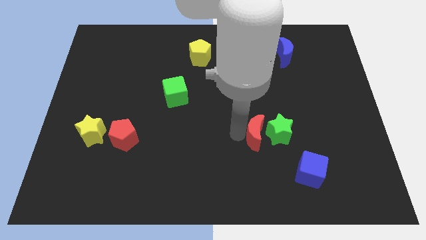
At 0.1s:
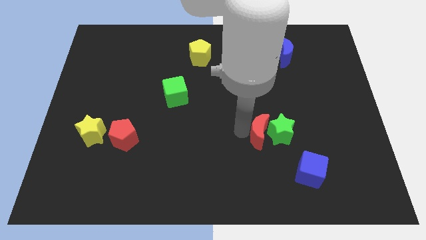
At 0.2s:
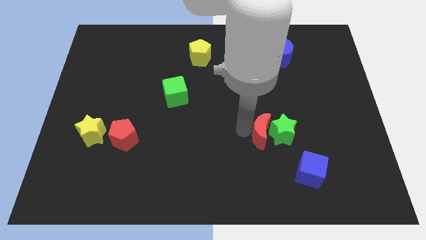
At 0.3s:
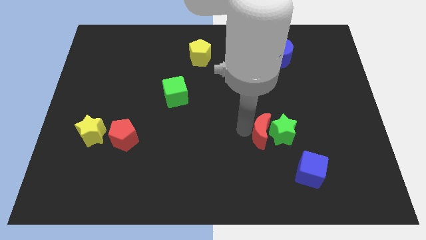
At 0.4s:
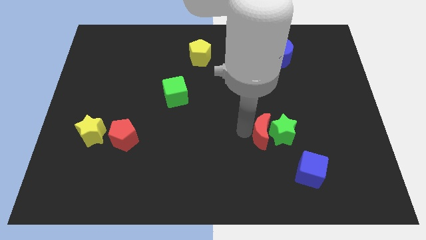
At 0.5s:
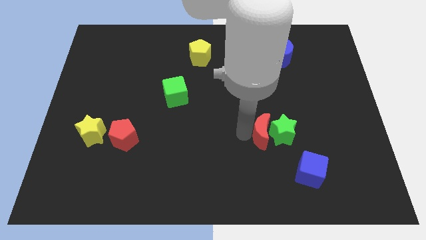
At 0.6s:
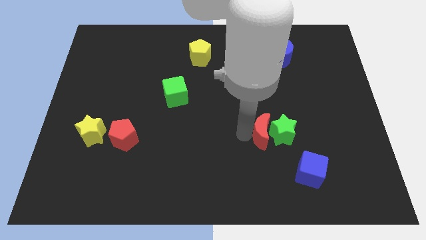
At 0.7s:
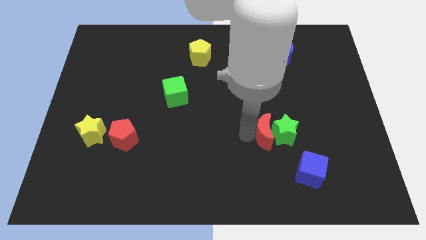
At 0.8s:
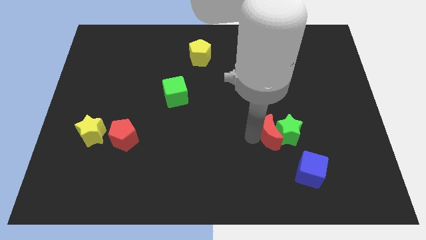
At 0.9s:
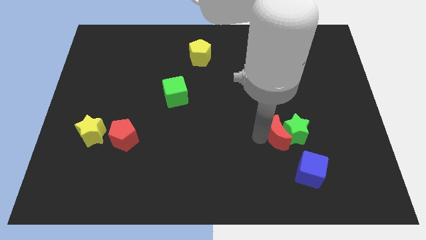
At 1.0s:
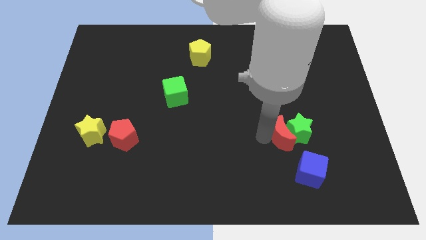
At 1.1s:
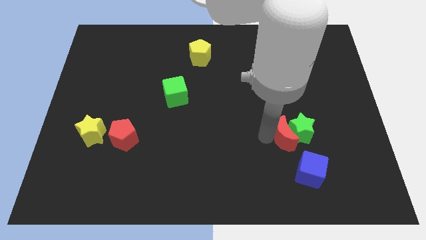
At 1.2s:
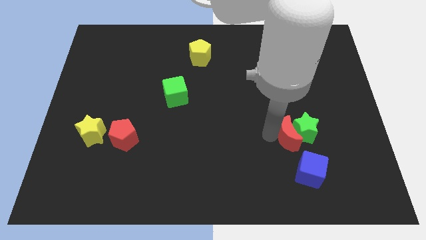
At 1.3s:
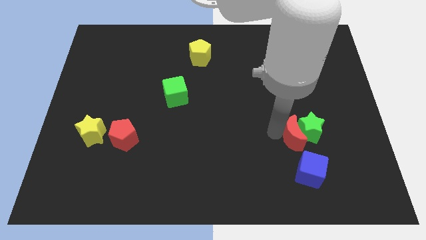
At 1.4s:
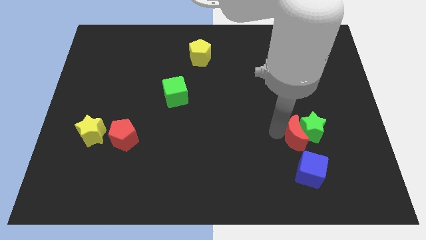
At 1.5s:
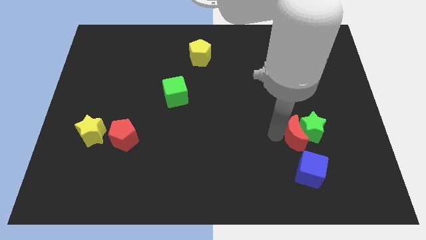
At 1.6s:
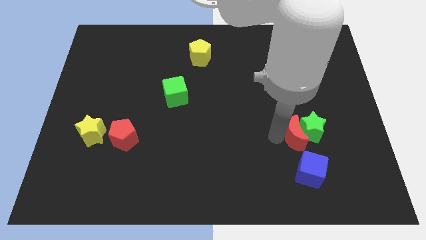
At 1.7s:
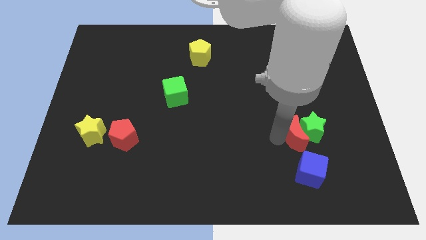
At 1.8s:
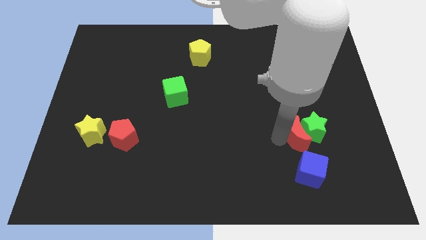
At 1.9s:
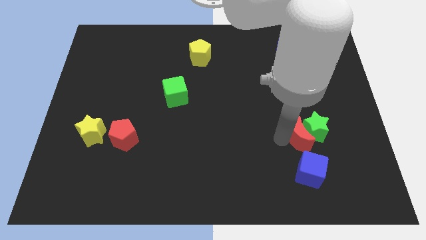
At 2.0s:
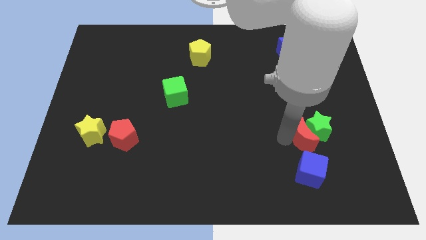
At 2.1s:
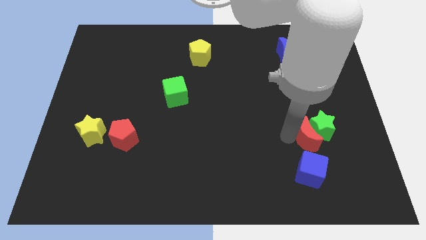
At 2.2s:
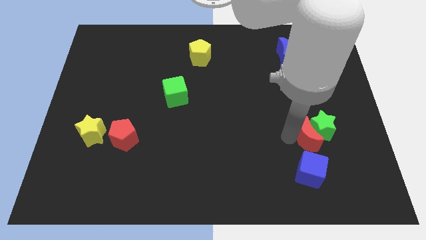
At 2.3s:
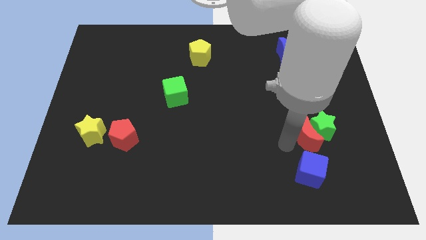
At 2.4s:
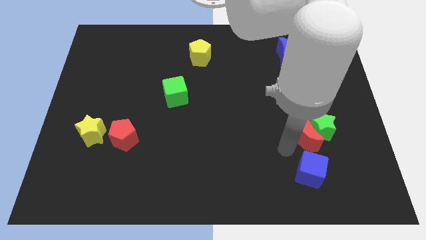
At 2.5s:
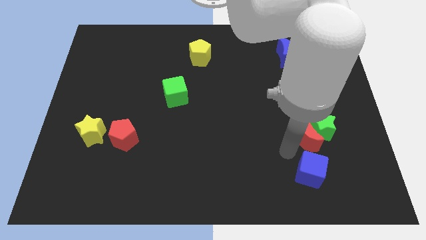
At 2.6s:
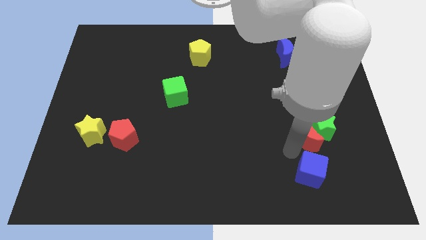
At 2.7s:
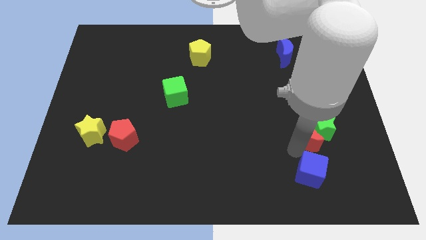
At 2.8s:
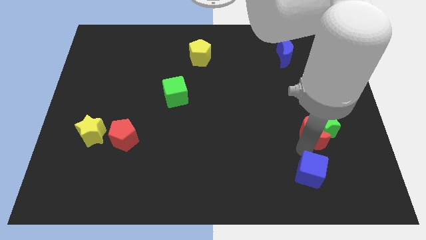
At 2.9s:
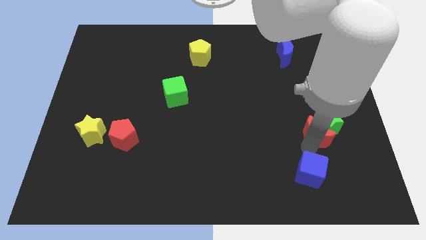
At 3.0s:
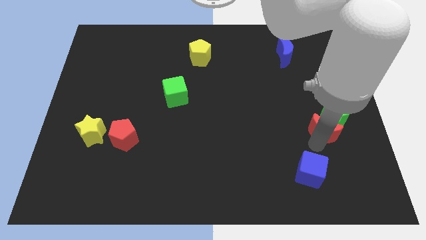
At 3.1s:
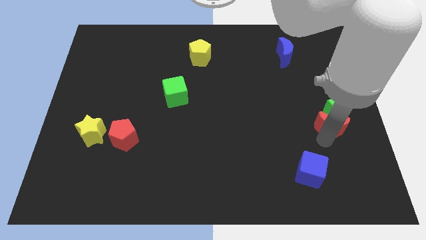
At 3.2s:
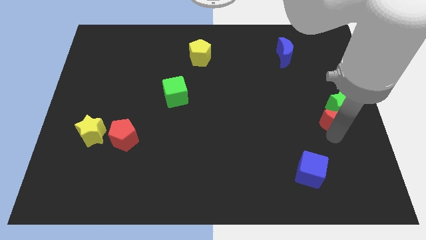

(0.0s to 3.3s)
push the red crescent and the green star together to the top right of the blue cube

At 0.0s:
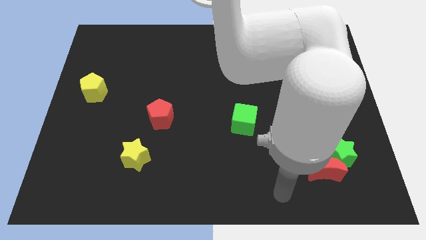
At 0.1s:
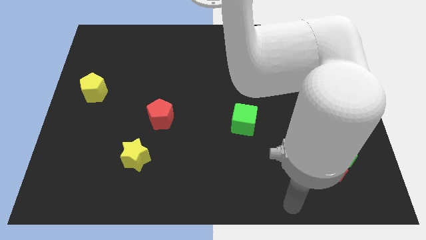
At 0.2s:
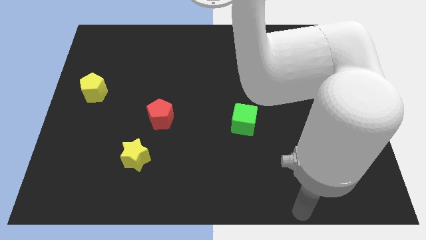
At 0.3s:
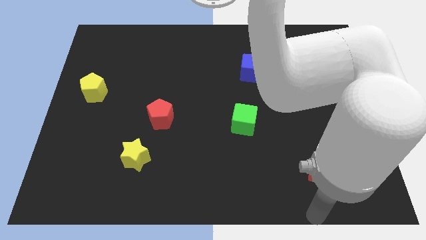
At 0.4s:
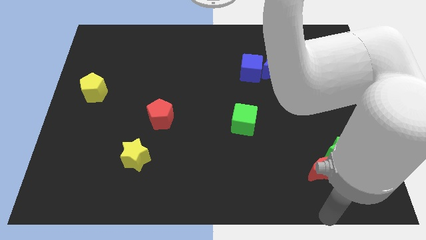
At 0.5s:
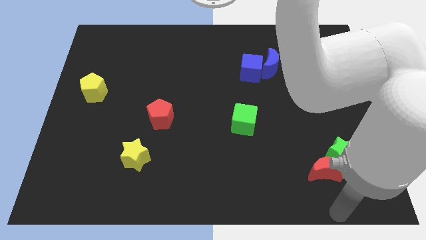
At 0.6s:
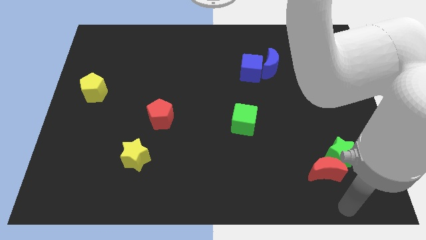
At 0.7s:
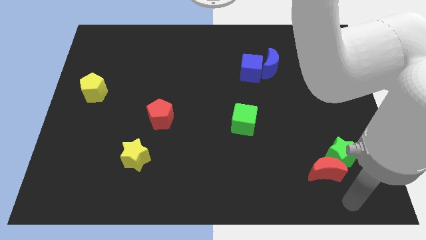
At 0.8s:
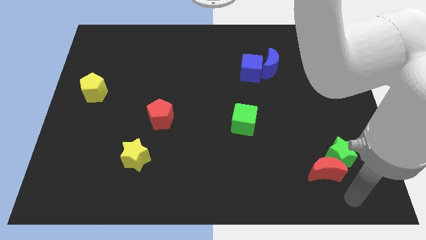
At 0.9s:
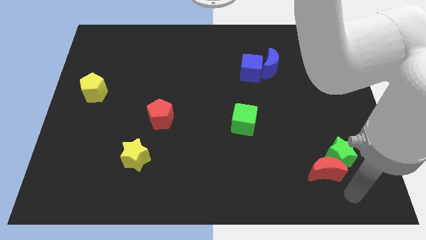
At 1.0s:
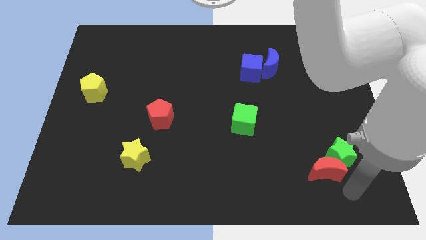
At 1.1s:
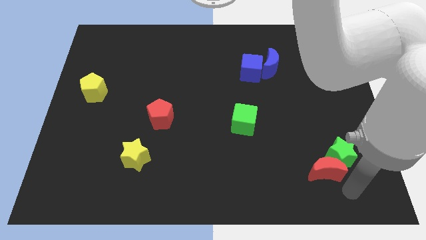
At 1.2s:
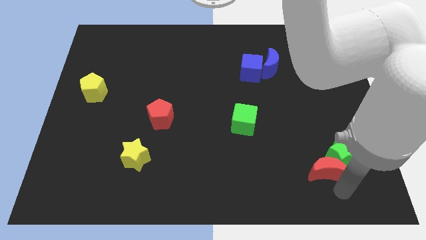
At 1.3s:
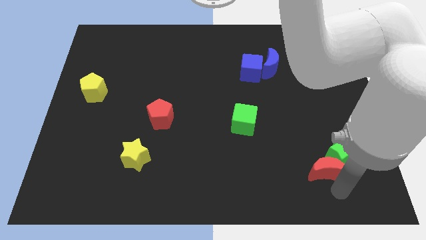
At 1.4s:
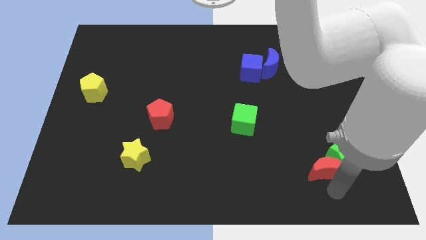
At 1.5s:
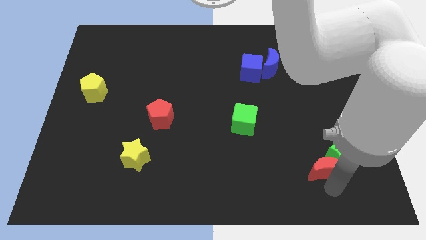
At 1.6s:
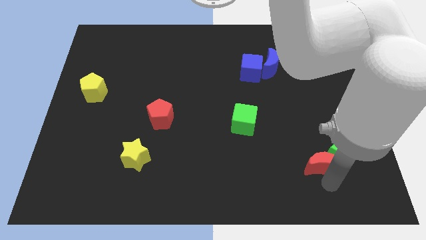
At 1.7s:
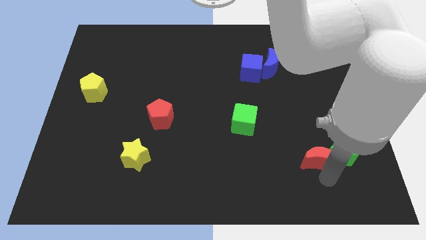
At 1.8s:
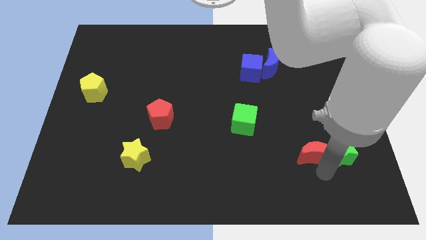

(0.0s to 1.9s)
touch the red moon

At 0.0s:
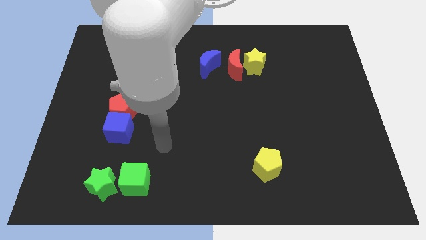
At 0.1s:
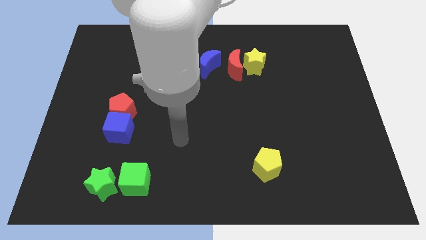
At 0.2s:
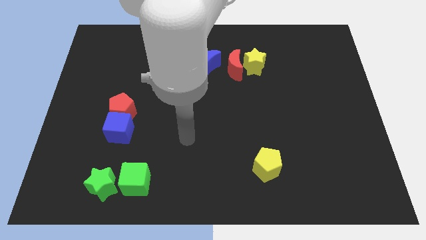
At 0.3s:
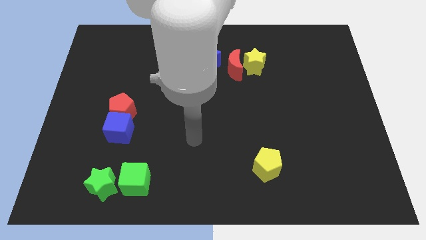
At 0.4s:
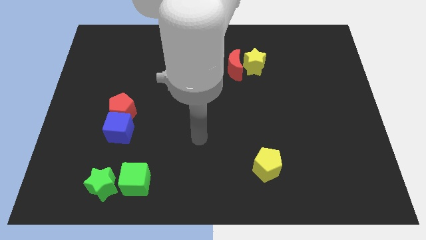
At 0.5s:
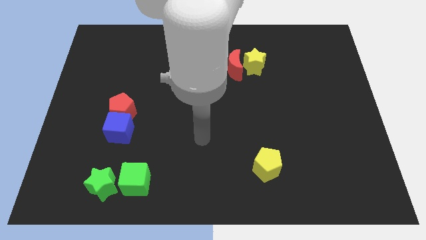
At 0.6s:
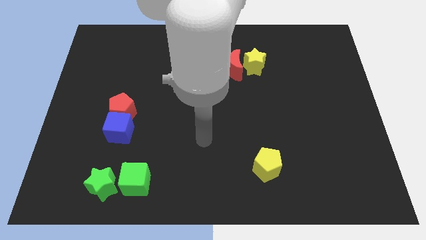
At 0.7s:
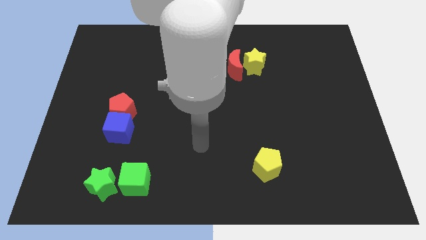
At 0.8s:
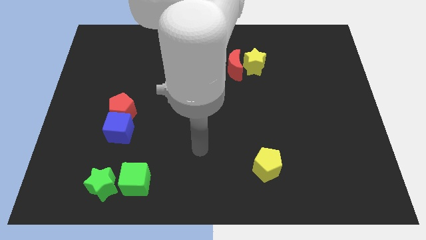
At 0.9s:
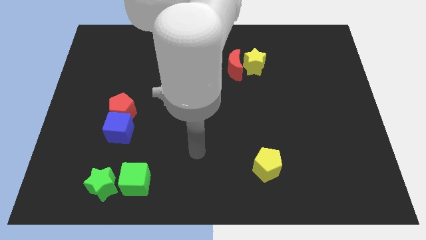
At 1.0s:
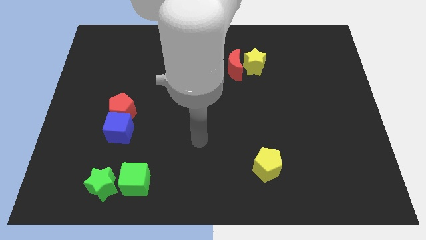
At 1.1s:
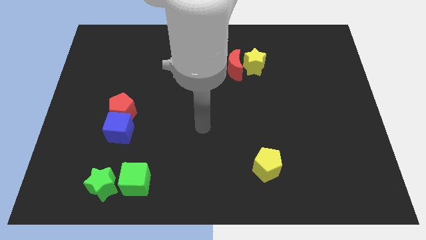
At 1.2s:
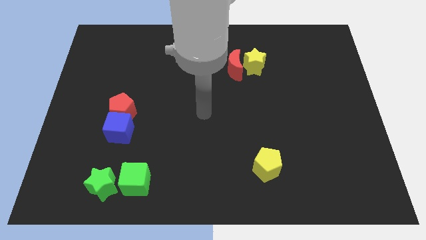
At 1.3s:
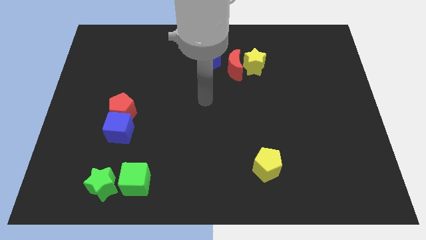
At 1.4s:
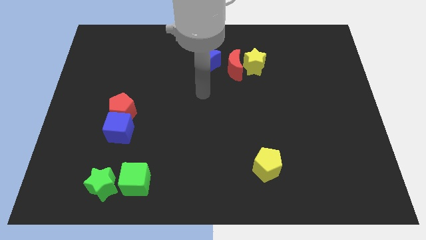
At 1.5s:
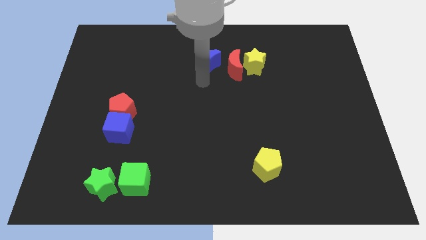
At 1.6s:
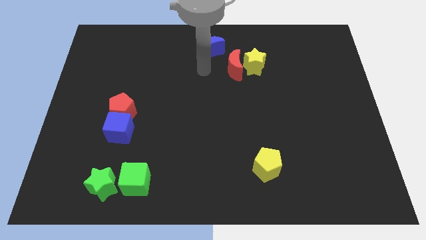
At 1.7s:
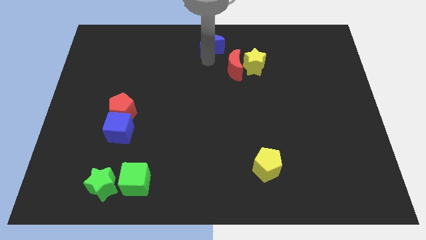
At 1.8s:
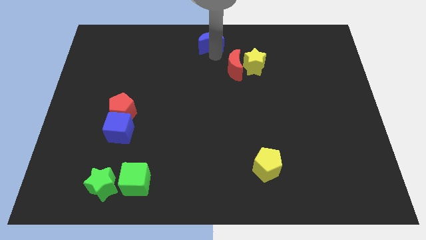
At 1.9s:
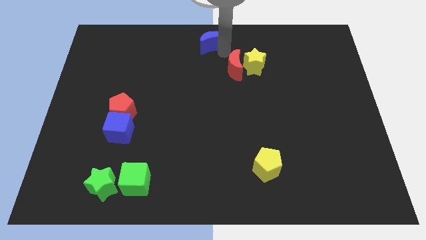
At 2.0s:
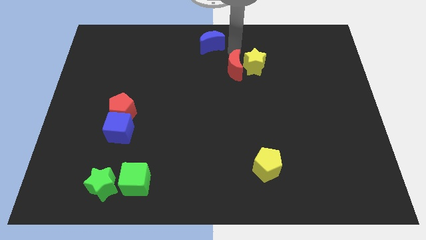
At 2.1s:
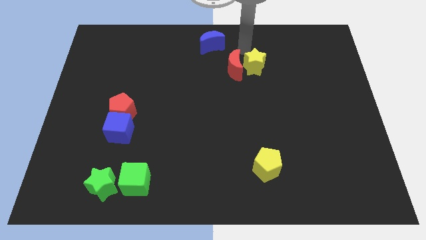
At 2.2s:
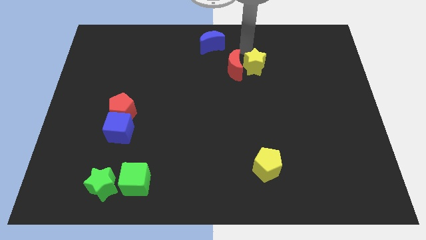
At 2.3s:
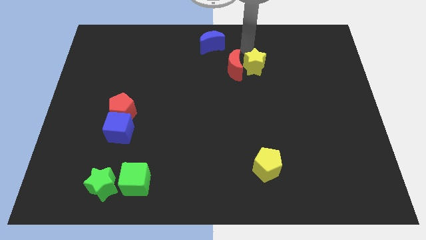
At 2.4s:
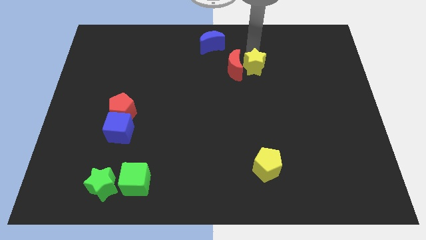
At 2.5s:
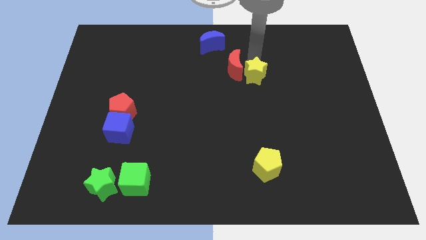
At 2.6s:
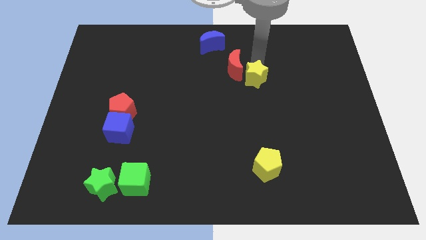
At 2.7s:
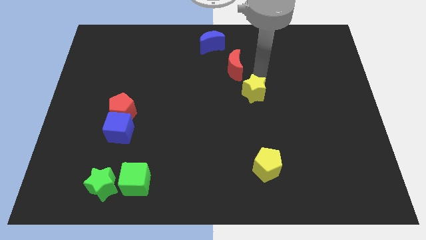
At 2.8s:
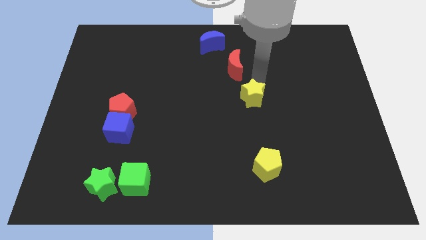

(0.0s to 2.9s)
adjust the yellow star and blue crescent on either sides of the red crescent

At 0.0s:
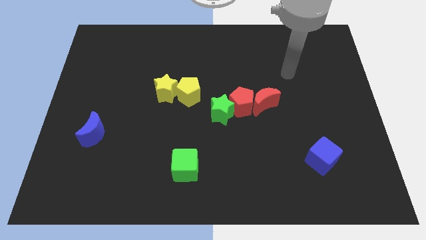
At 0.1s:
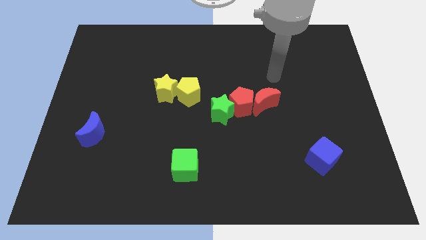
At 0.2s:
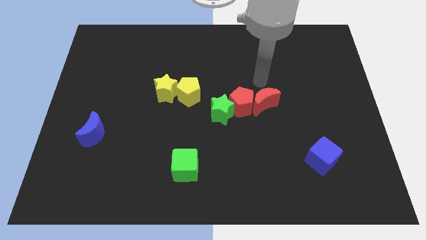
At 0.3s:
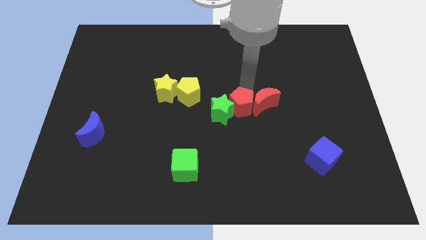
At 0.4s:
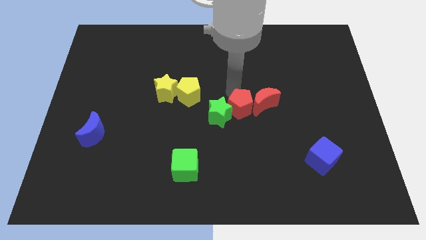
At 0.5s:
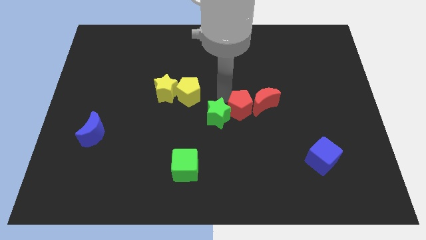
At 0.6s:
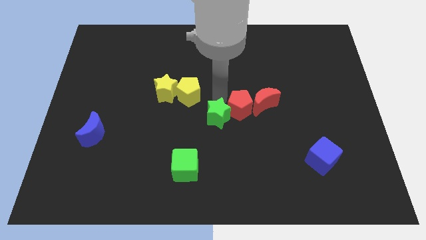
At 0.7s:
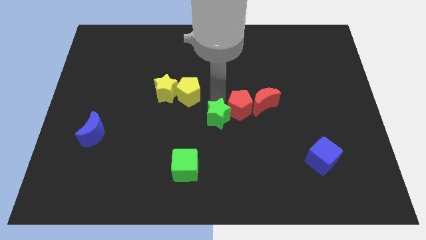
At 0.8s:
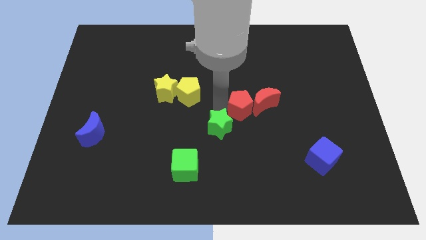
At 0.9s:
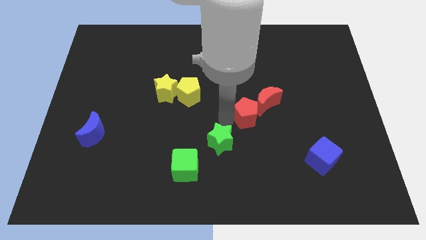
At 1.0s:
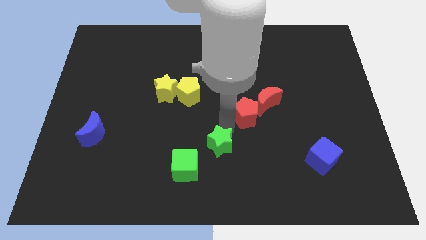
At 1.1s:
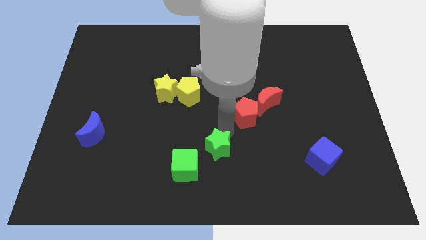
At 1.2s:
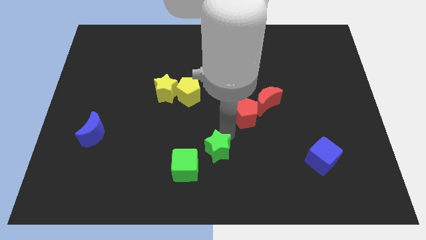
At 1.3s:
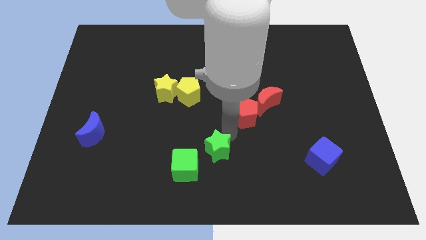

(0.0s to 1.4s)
push the green star away from the red pentagon
